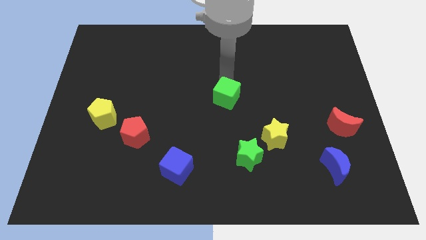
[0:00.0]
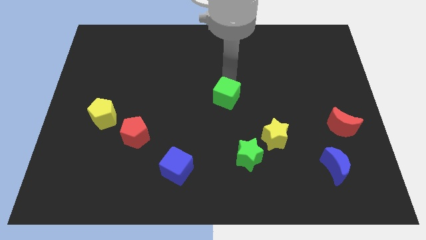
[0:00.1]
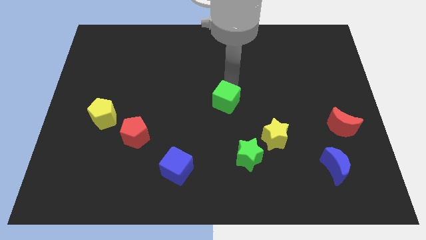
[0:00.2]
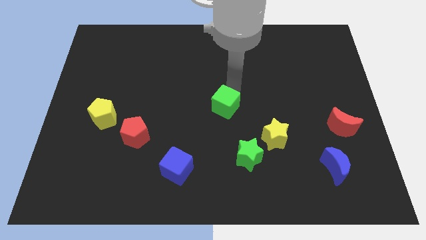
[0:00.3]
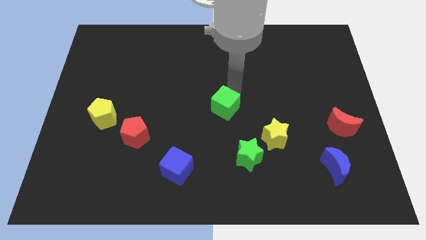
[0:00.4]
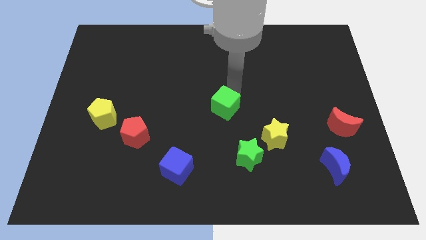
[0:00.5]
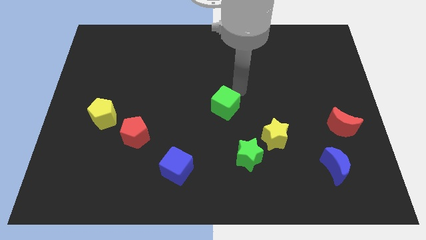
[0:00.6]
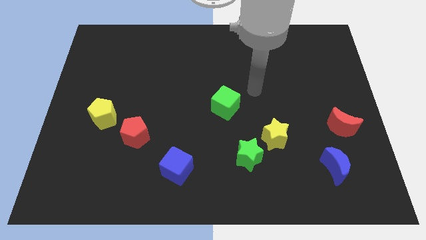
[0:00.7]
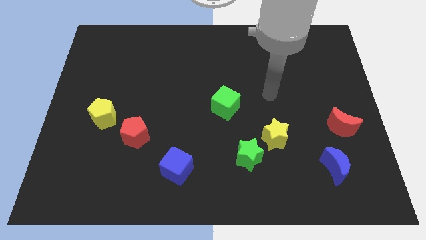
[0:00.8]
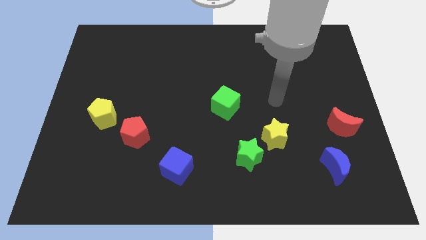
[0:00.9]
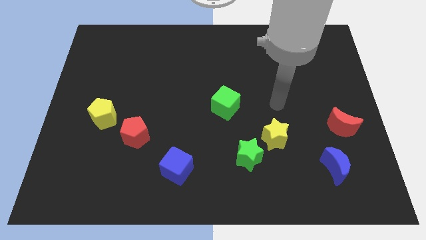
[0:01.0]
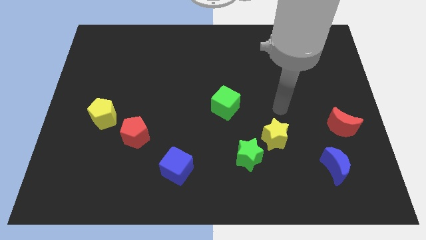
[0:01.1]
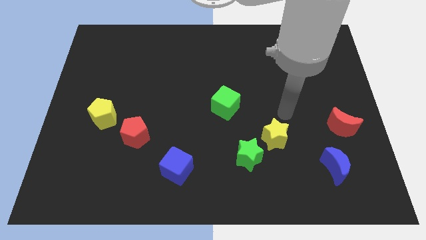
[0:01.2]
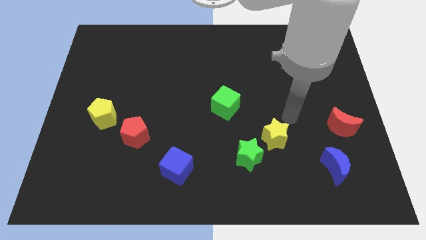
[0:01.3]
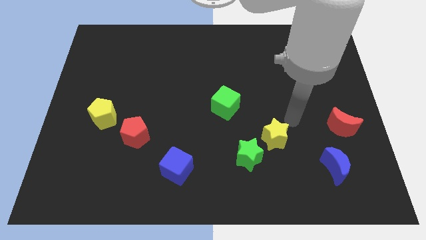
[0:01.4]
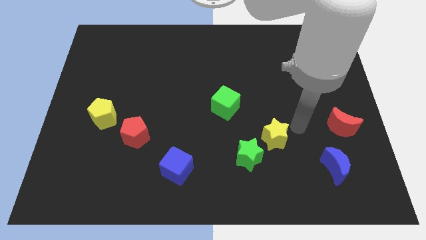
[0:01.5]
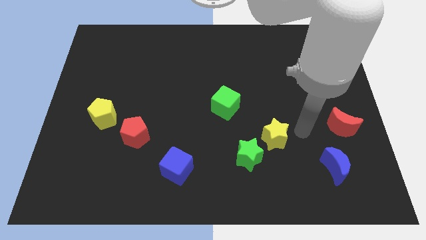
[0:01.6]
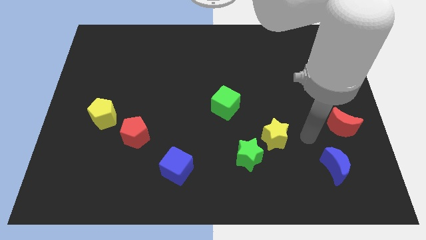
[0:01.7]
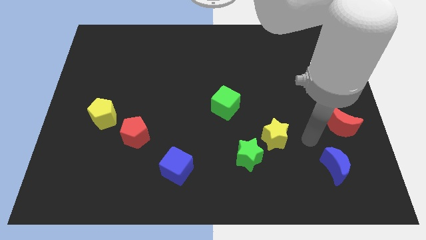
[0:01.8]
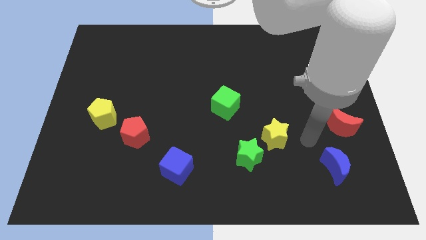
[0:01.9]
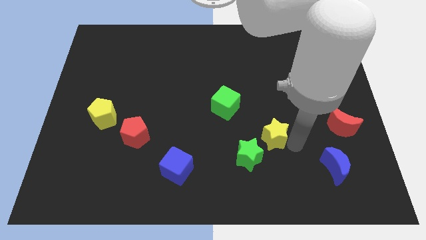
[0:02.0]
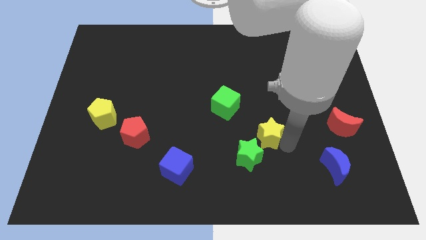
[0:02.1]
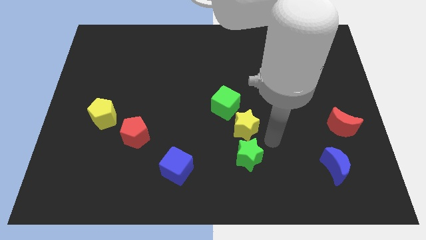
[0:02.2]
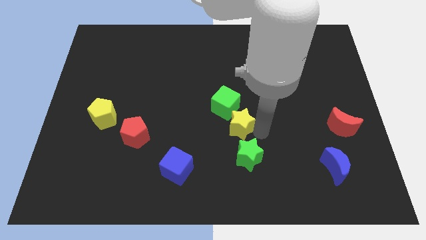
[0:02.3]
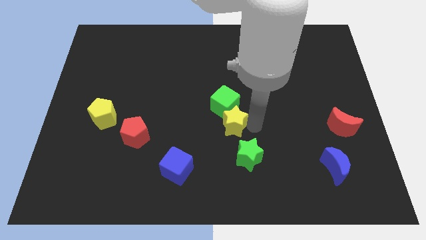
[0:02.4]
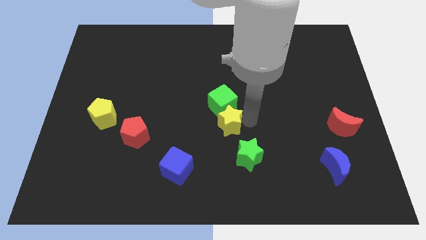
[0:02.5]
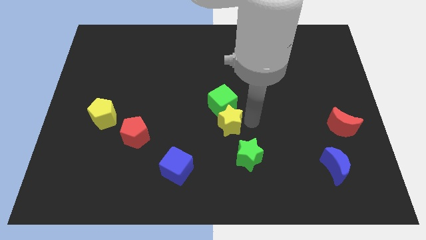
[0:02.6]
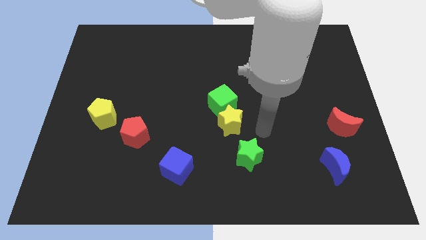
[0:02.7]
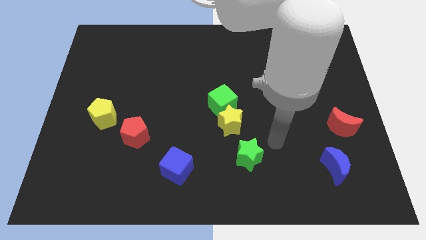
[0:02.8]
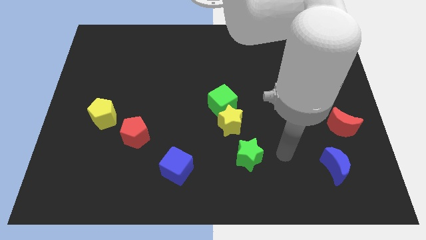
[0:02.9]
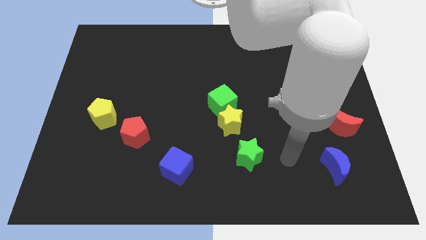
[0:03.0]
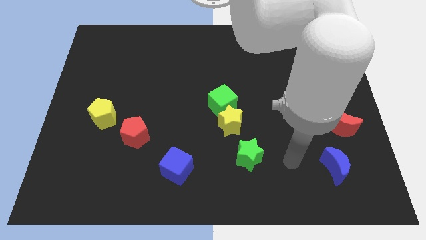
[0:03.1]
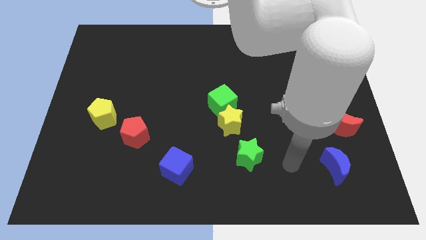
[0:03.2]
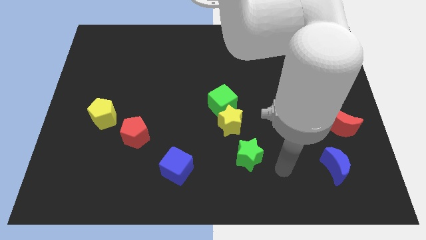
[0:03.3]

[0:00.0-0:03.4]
push the yellow star and place it below the green cube

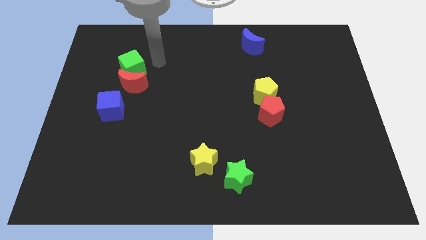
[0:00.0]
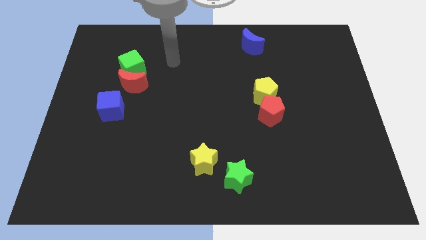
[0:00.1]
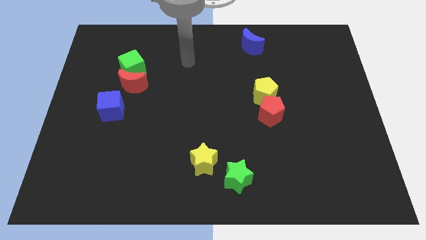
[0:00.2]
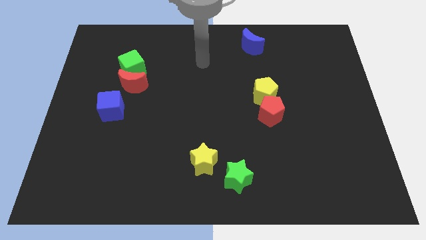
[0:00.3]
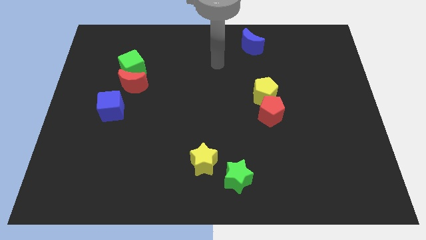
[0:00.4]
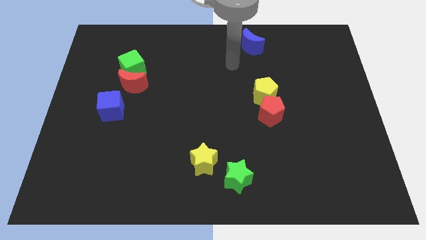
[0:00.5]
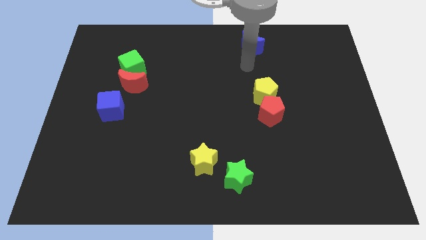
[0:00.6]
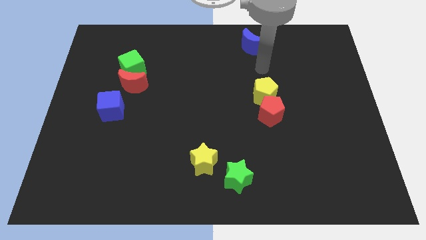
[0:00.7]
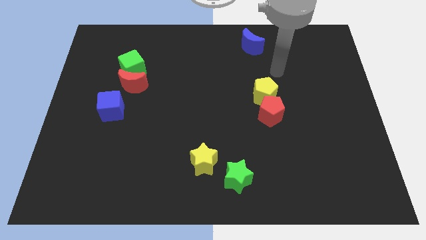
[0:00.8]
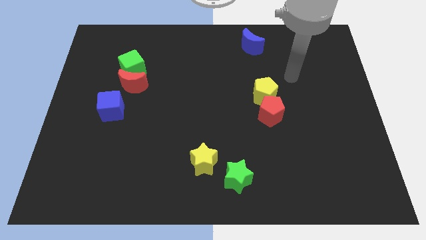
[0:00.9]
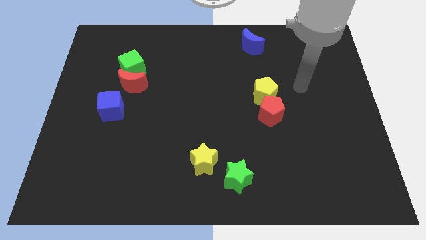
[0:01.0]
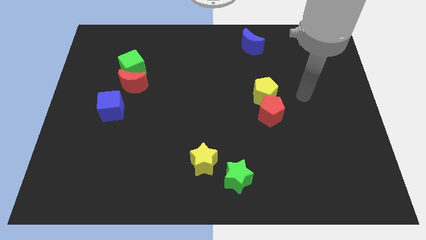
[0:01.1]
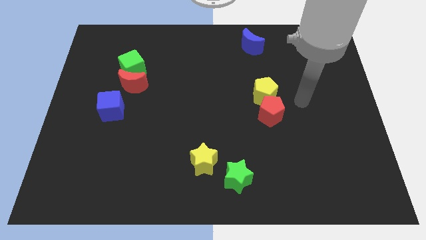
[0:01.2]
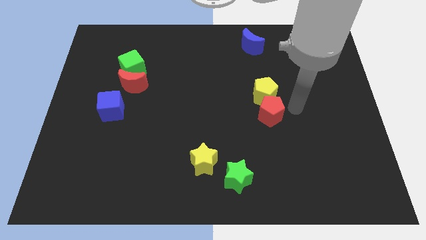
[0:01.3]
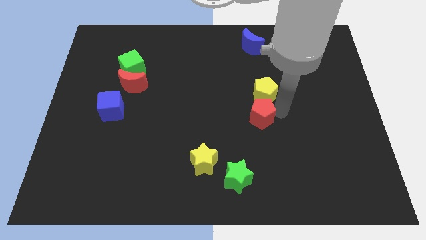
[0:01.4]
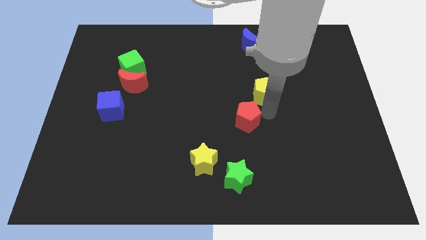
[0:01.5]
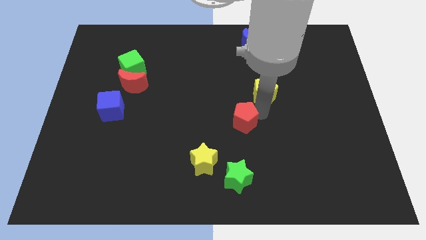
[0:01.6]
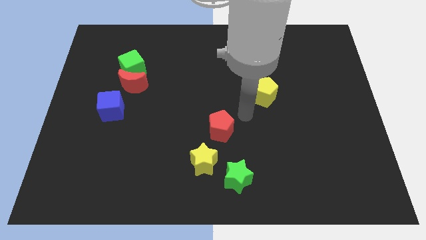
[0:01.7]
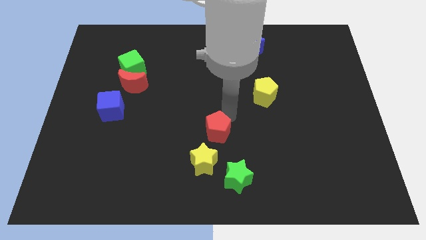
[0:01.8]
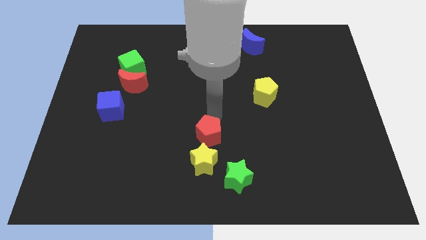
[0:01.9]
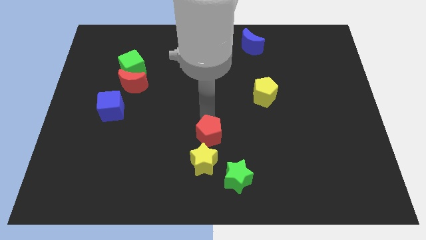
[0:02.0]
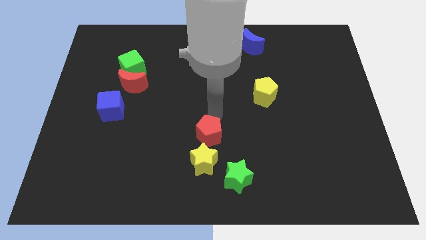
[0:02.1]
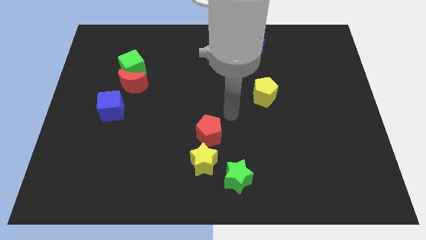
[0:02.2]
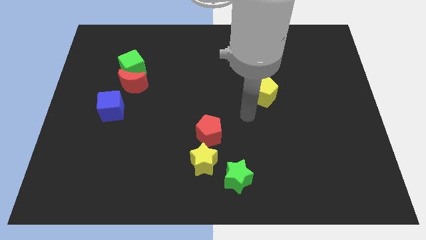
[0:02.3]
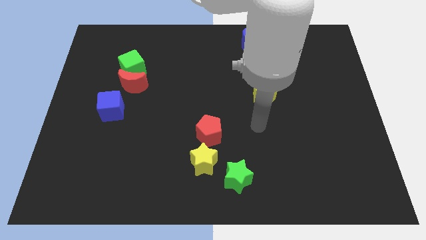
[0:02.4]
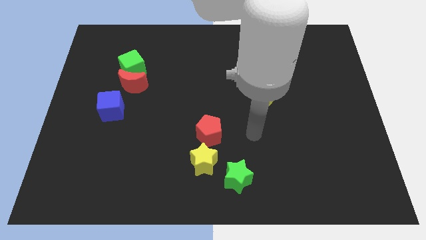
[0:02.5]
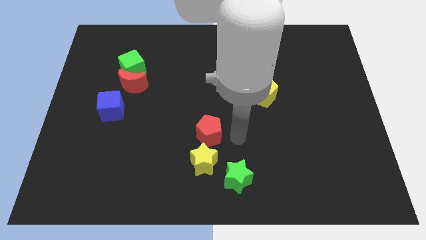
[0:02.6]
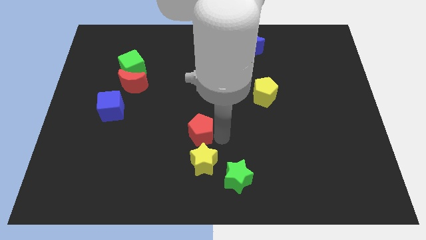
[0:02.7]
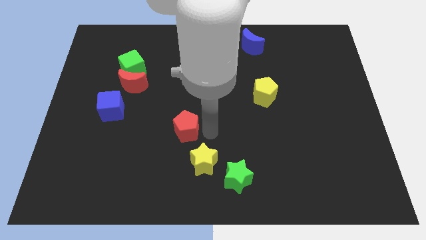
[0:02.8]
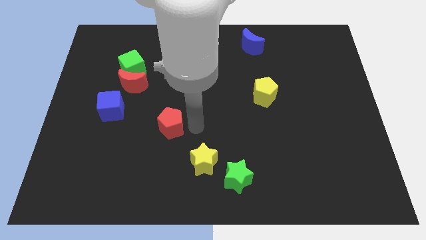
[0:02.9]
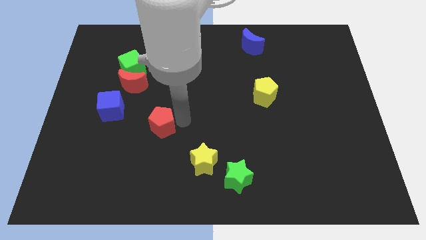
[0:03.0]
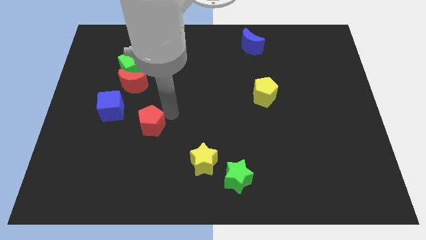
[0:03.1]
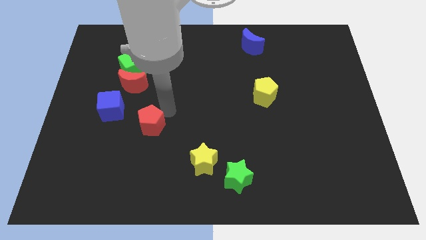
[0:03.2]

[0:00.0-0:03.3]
place the red pentagon beside the blue cube to form a line

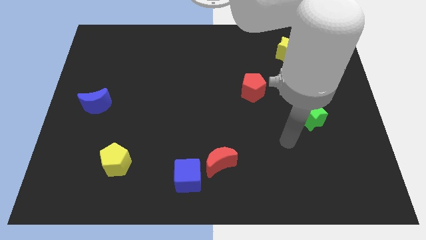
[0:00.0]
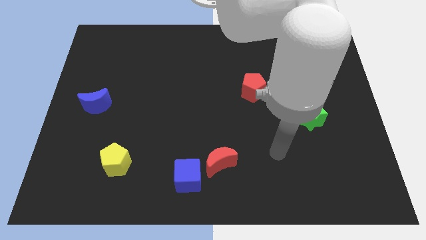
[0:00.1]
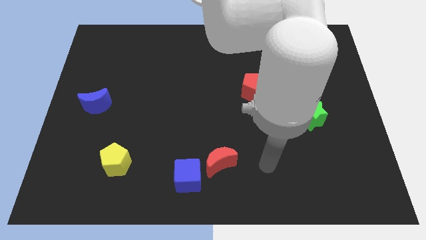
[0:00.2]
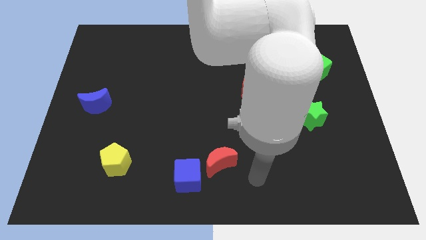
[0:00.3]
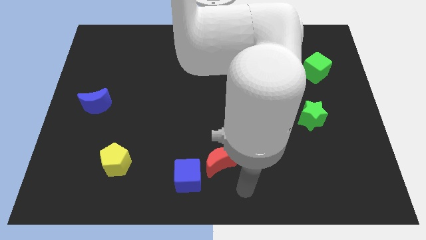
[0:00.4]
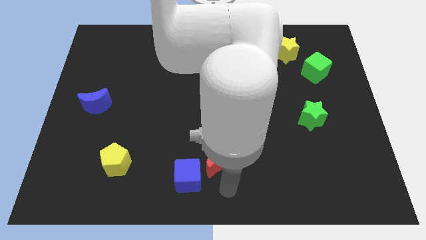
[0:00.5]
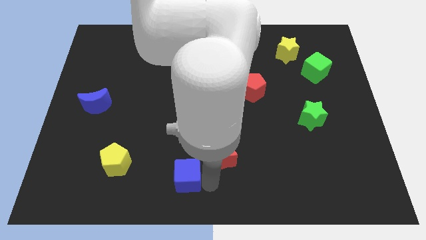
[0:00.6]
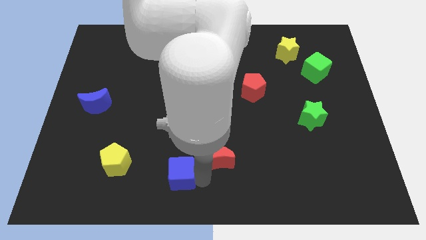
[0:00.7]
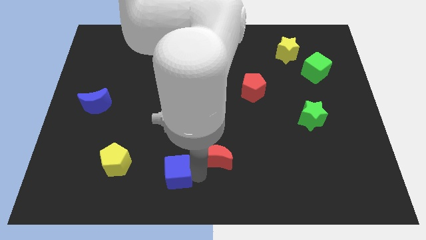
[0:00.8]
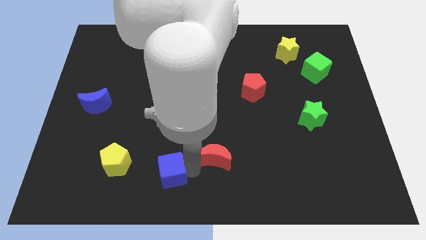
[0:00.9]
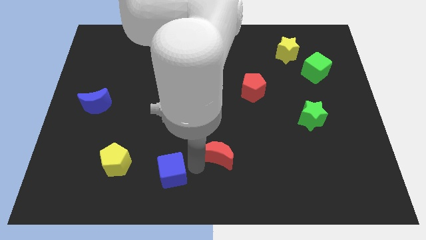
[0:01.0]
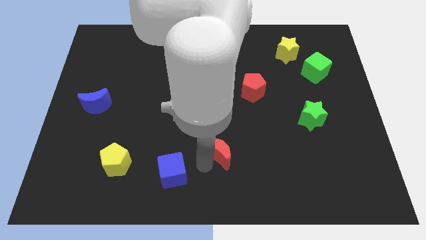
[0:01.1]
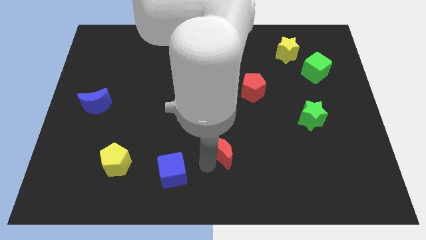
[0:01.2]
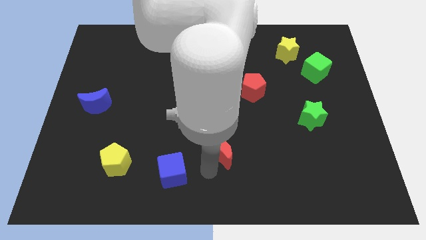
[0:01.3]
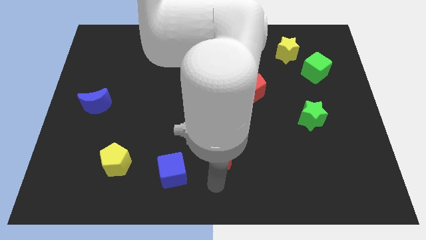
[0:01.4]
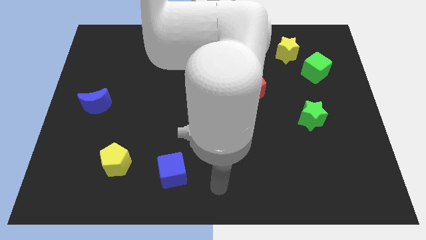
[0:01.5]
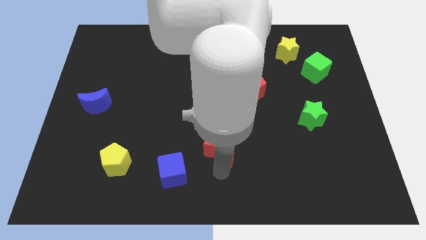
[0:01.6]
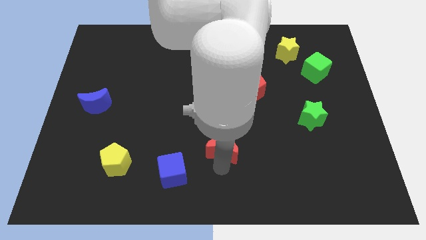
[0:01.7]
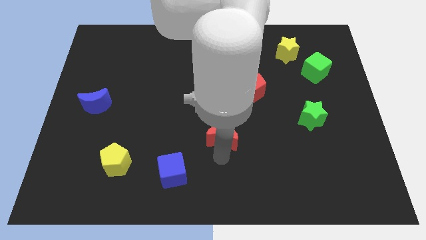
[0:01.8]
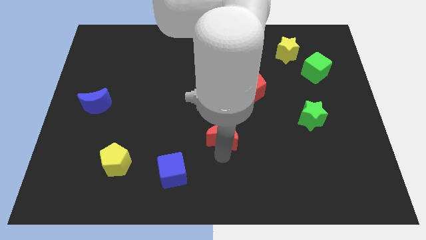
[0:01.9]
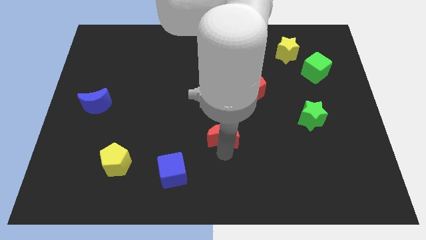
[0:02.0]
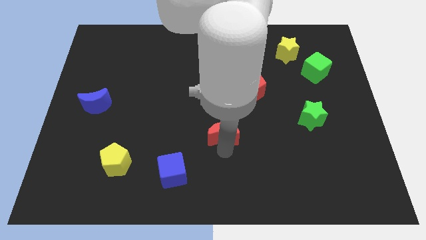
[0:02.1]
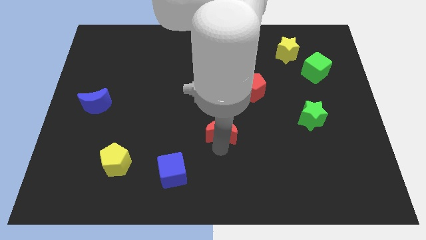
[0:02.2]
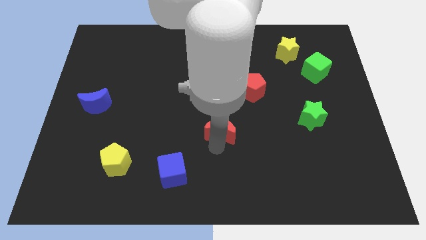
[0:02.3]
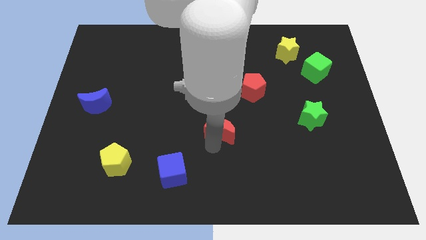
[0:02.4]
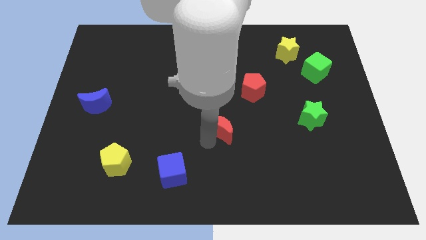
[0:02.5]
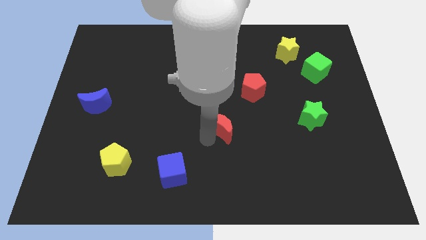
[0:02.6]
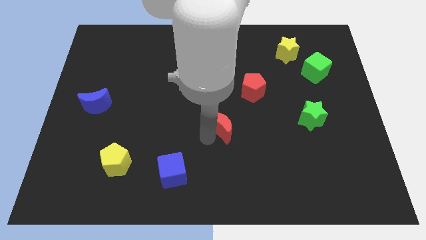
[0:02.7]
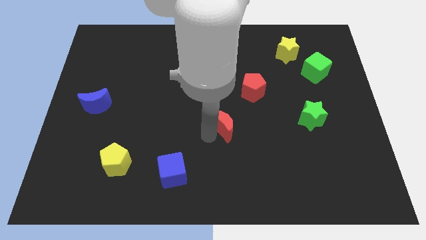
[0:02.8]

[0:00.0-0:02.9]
push red crescent away from the blue cube
